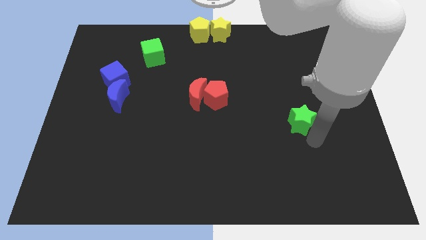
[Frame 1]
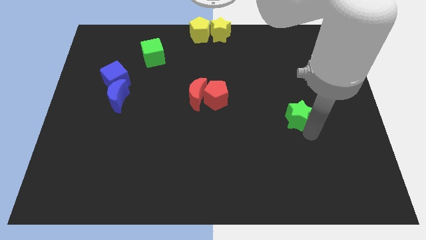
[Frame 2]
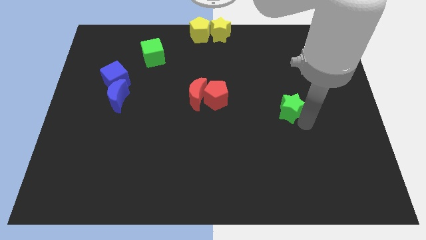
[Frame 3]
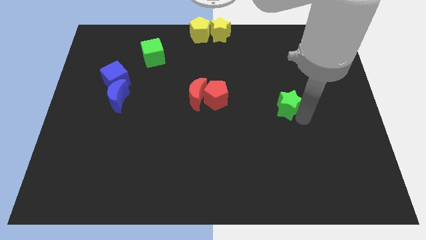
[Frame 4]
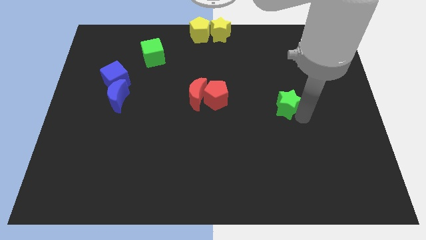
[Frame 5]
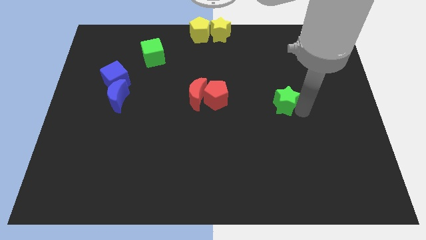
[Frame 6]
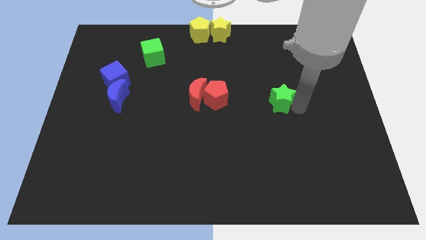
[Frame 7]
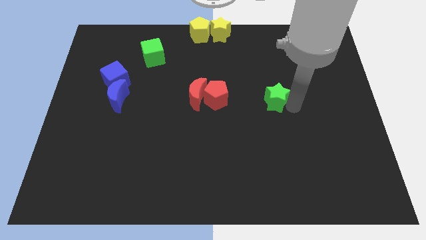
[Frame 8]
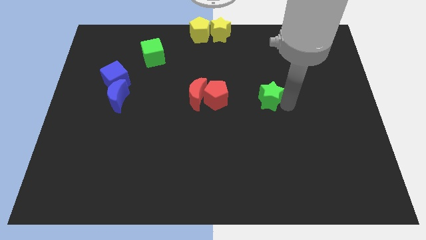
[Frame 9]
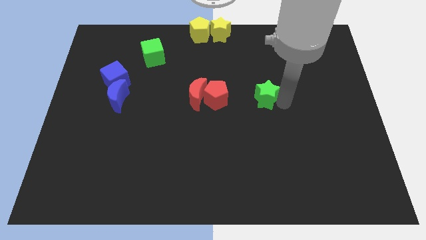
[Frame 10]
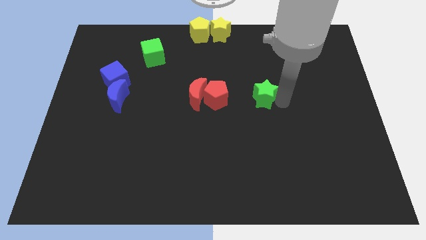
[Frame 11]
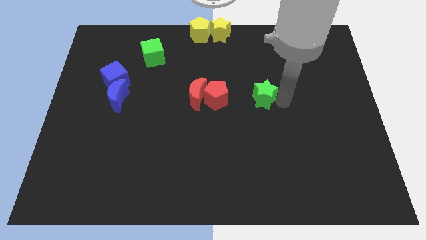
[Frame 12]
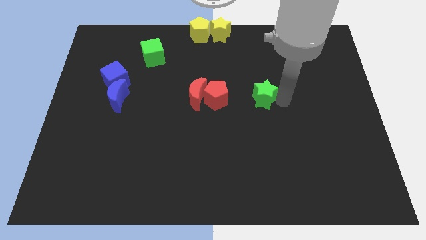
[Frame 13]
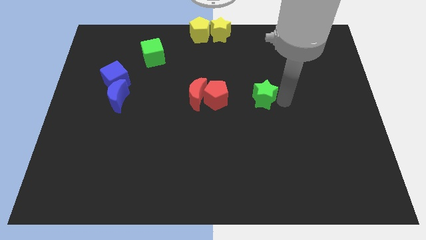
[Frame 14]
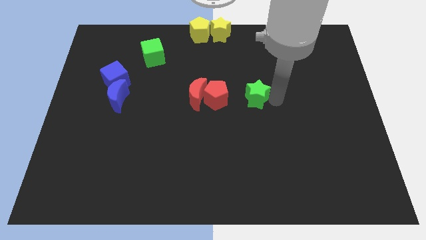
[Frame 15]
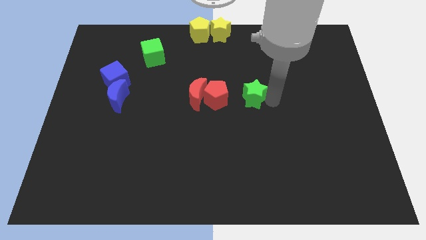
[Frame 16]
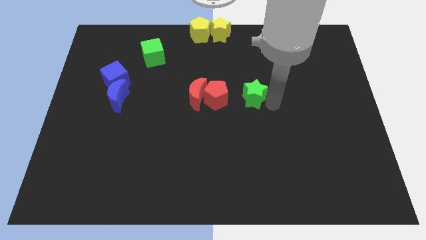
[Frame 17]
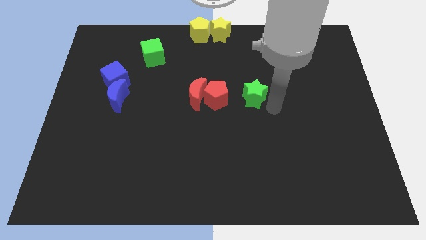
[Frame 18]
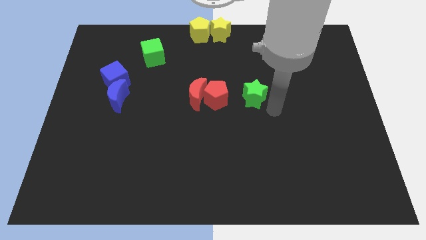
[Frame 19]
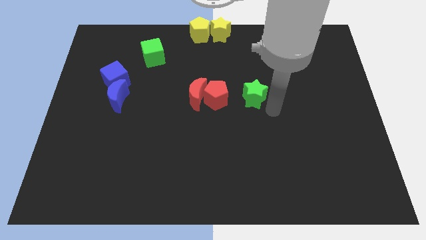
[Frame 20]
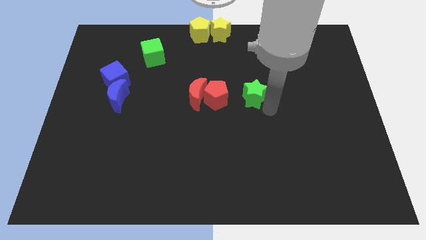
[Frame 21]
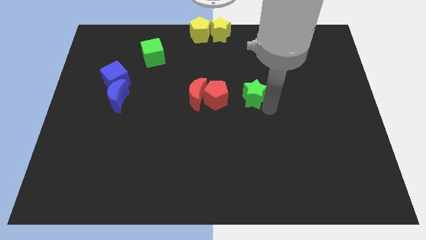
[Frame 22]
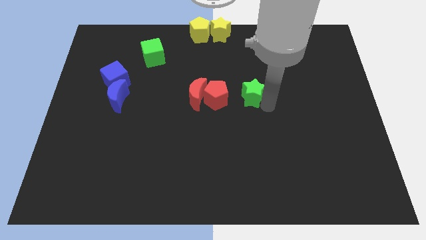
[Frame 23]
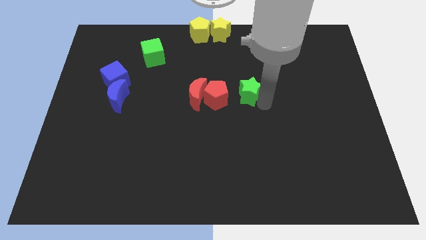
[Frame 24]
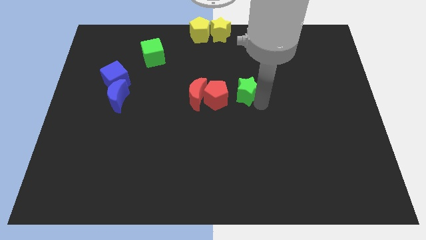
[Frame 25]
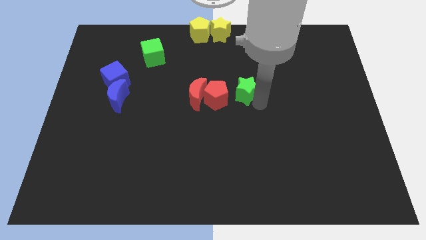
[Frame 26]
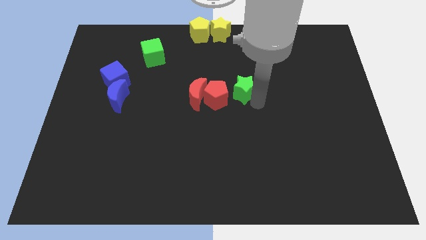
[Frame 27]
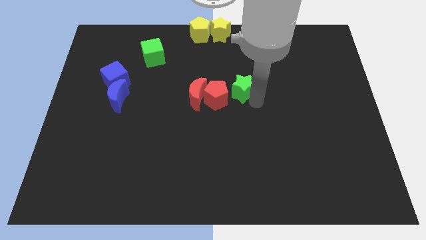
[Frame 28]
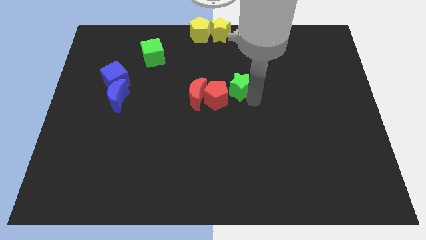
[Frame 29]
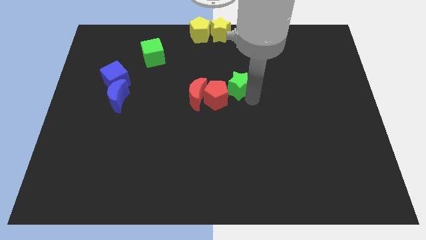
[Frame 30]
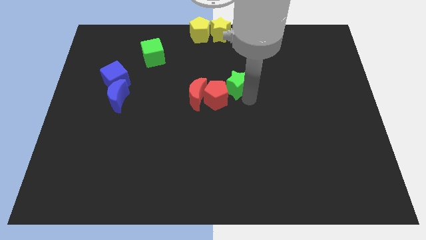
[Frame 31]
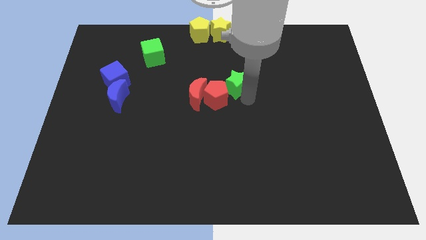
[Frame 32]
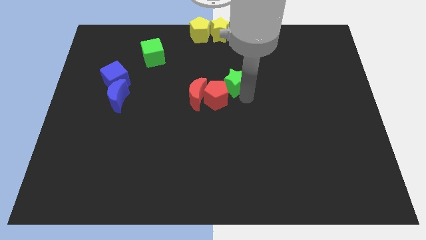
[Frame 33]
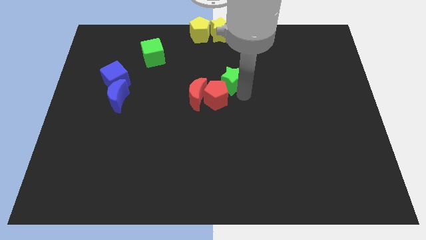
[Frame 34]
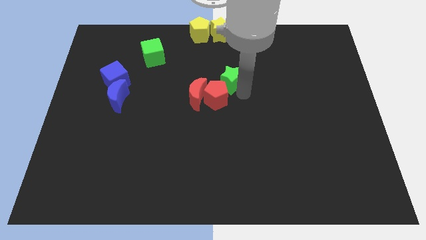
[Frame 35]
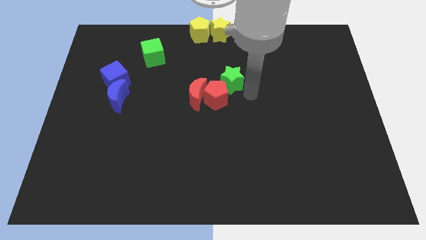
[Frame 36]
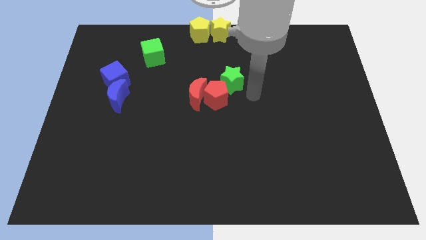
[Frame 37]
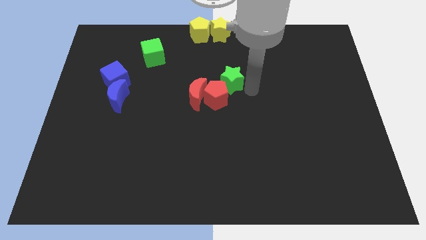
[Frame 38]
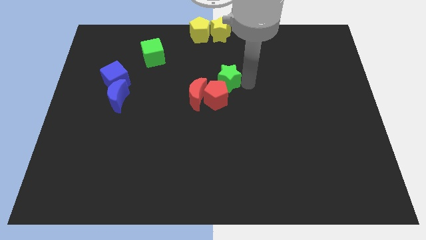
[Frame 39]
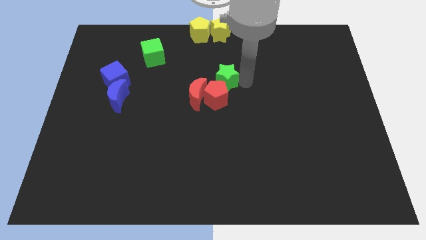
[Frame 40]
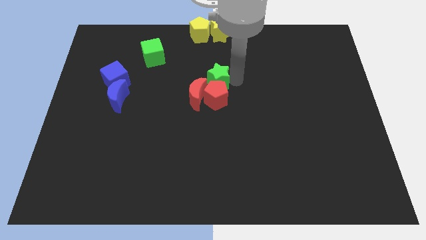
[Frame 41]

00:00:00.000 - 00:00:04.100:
place green star on top of red pentagon

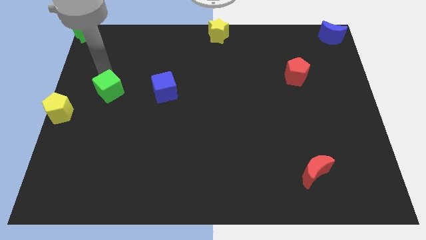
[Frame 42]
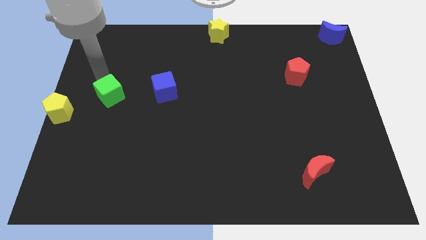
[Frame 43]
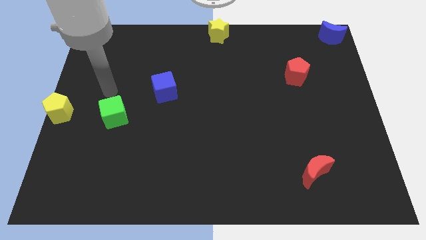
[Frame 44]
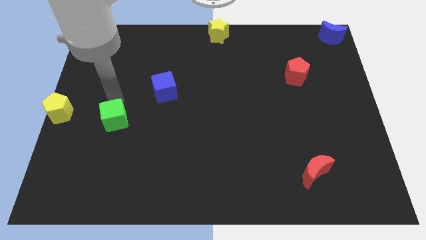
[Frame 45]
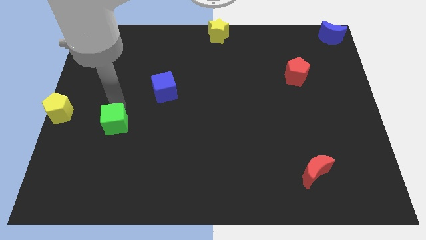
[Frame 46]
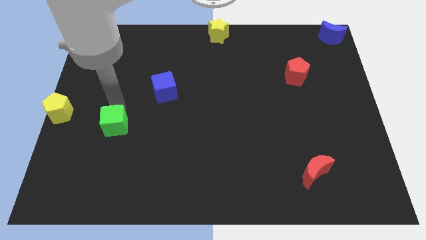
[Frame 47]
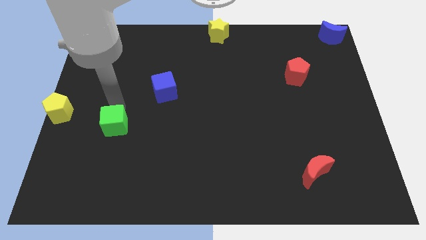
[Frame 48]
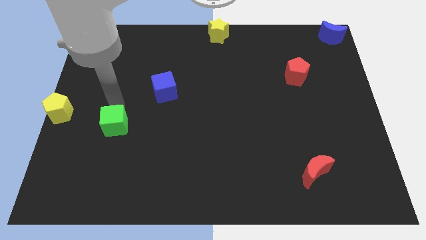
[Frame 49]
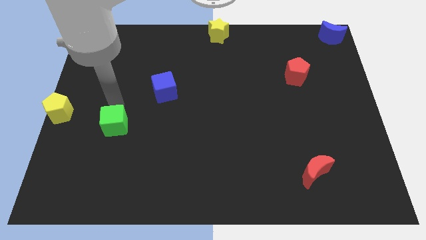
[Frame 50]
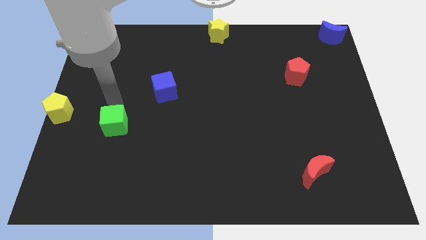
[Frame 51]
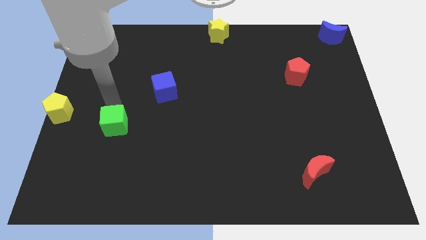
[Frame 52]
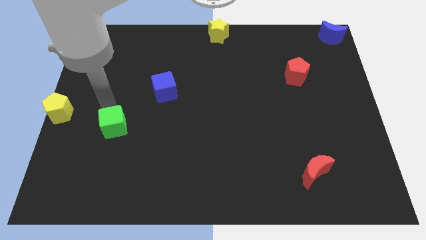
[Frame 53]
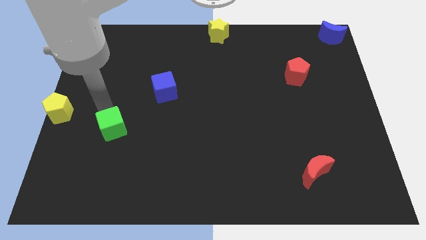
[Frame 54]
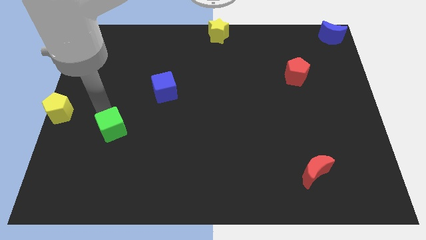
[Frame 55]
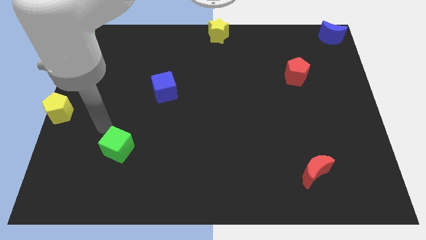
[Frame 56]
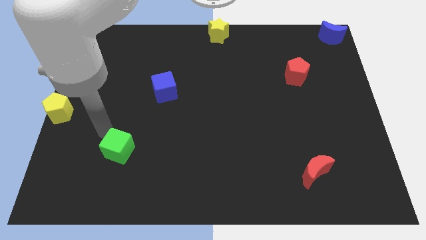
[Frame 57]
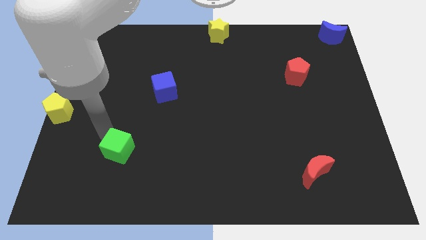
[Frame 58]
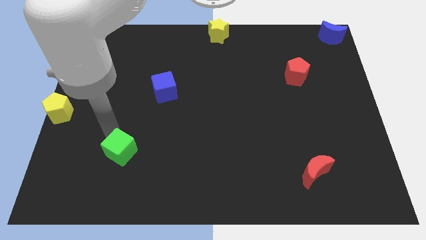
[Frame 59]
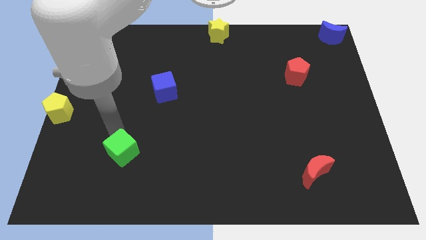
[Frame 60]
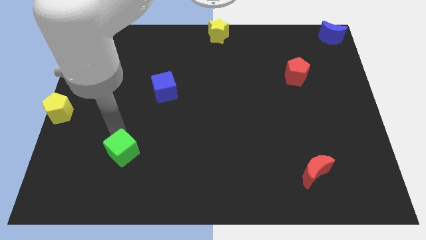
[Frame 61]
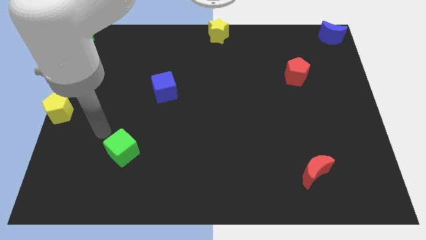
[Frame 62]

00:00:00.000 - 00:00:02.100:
push the green cube towards the down of the board

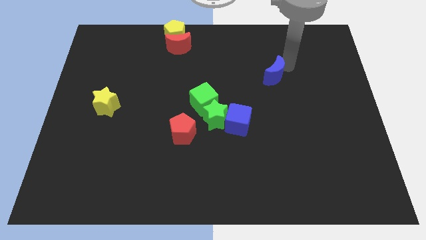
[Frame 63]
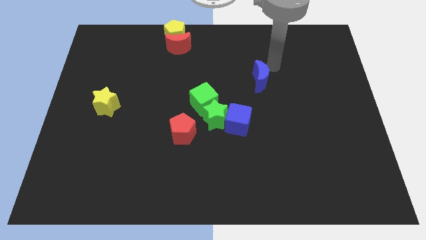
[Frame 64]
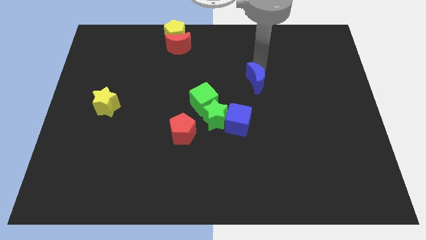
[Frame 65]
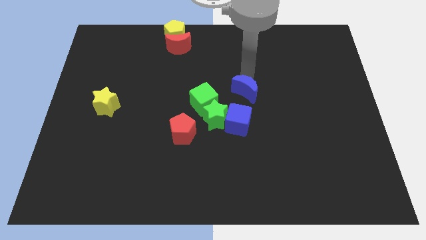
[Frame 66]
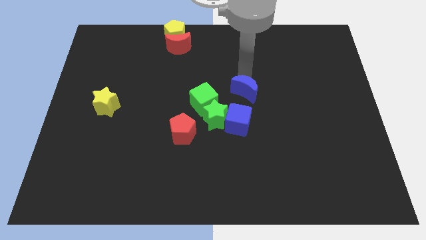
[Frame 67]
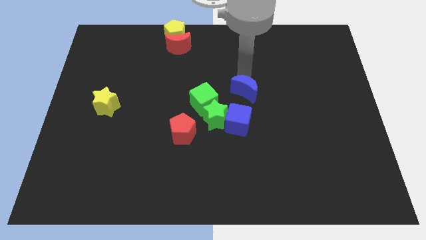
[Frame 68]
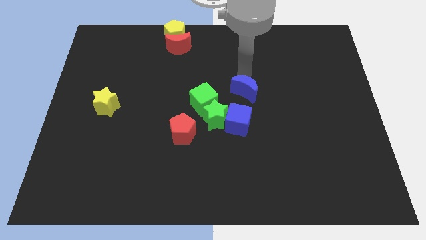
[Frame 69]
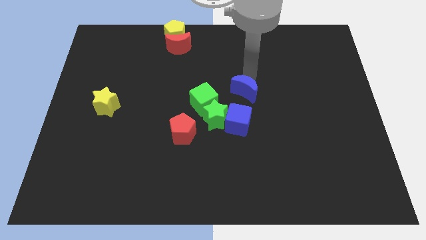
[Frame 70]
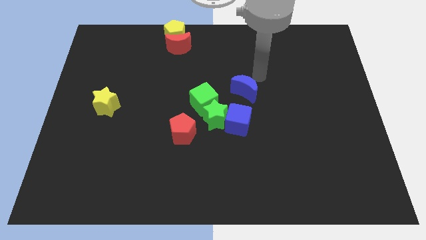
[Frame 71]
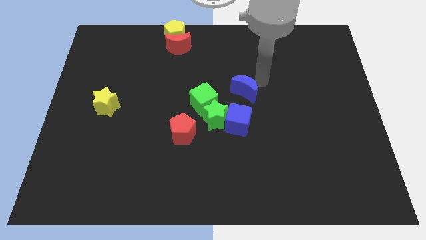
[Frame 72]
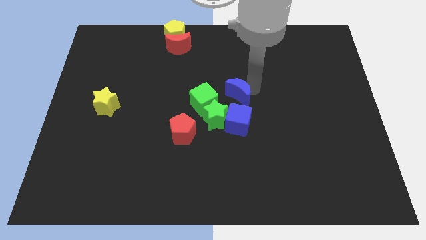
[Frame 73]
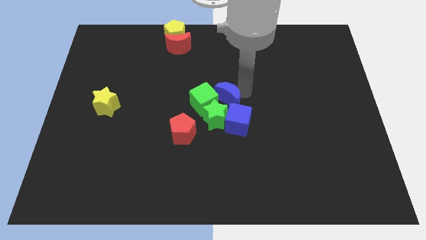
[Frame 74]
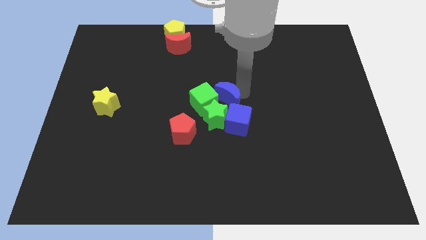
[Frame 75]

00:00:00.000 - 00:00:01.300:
push the blue moon into the group of blocks

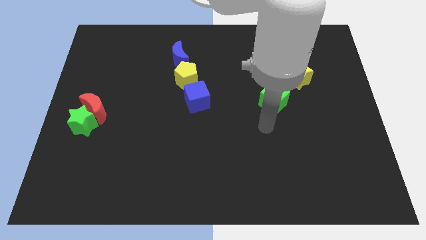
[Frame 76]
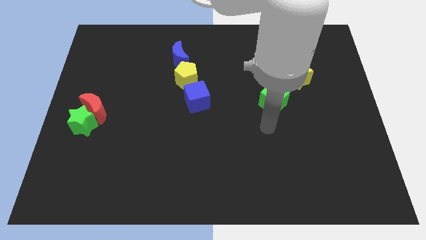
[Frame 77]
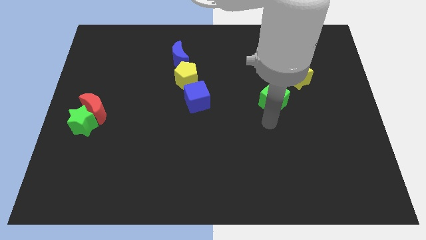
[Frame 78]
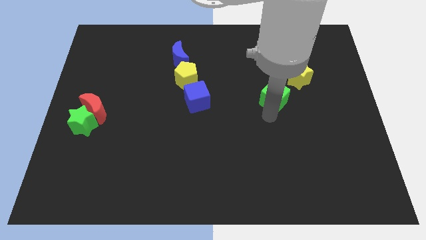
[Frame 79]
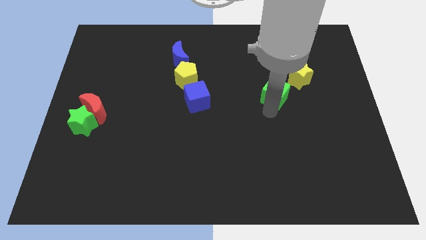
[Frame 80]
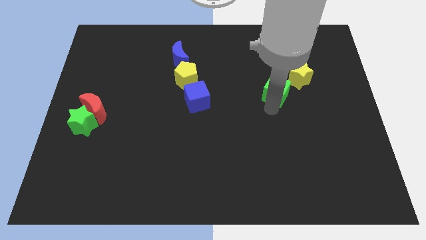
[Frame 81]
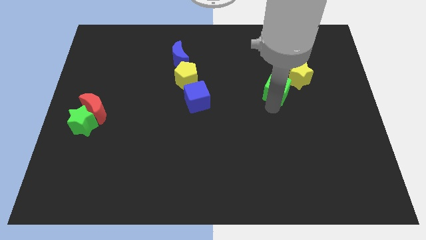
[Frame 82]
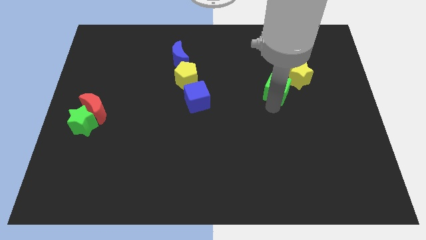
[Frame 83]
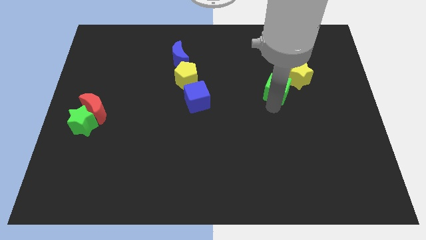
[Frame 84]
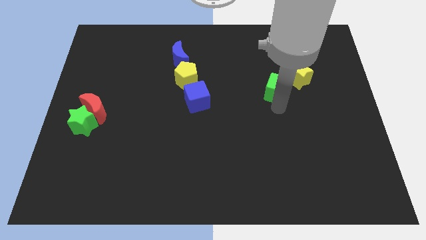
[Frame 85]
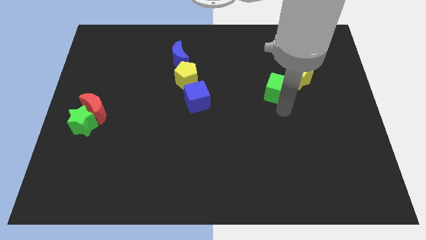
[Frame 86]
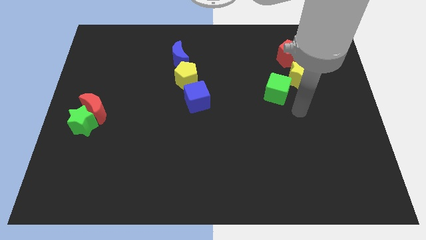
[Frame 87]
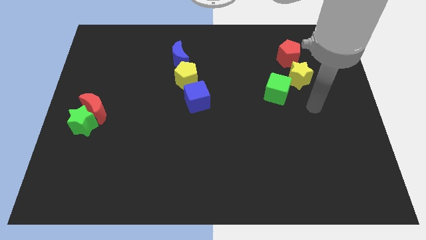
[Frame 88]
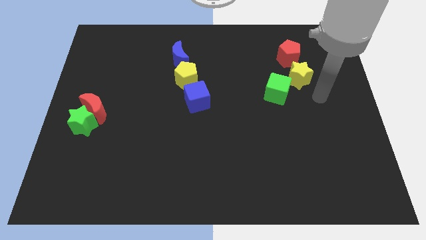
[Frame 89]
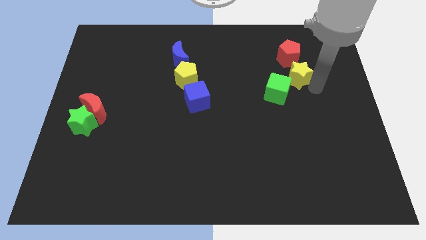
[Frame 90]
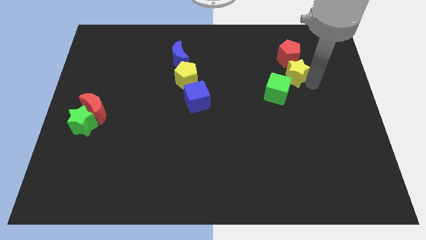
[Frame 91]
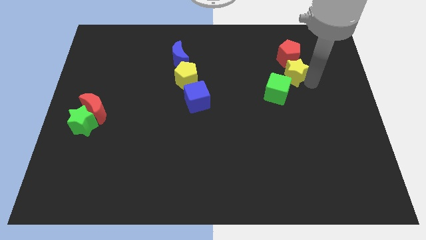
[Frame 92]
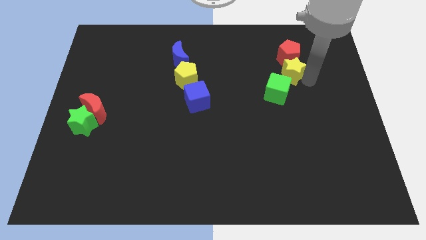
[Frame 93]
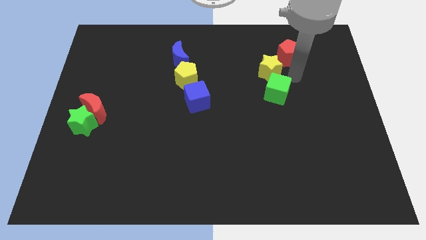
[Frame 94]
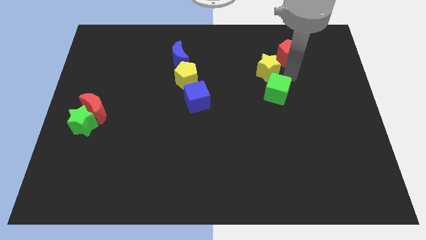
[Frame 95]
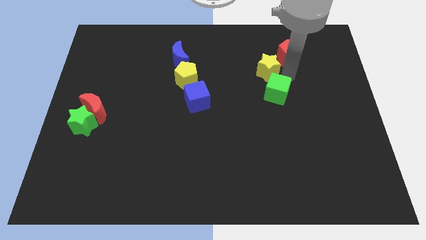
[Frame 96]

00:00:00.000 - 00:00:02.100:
push the yellow star towards left side
